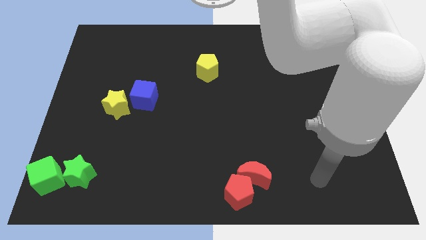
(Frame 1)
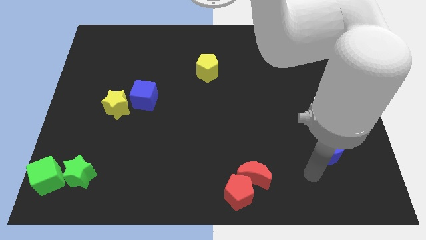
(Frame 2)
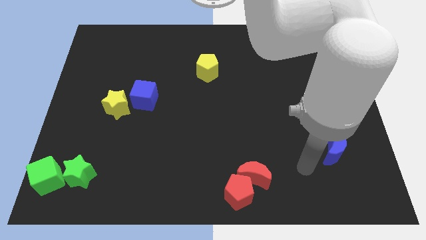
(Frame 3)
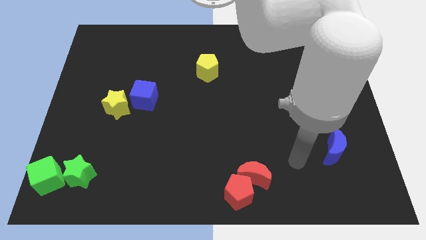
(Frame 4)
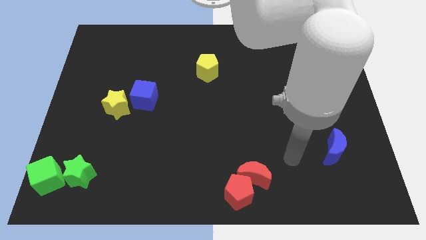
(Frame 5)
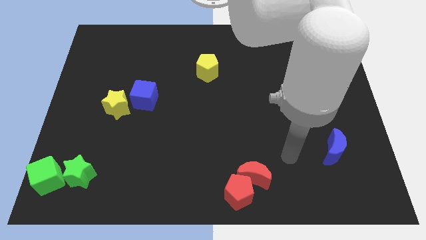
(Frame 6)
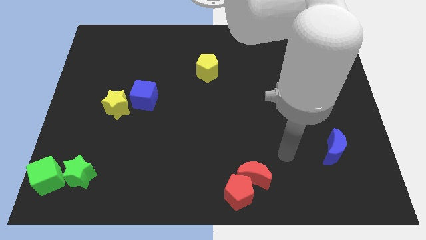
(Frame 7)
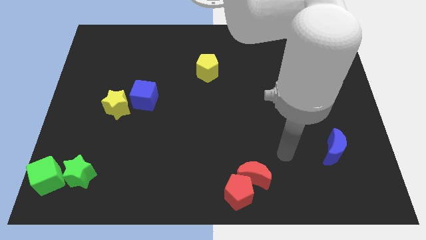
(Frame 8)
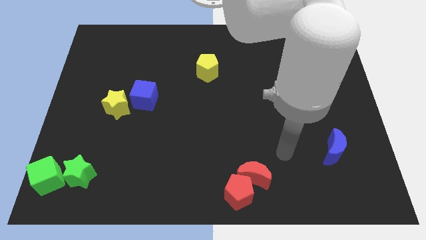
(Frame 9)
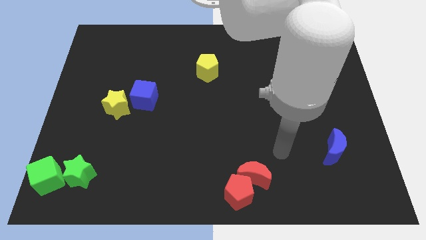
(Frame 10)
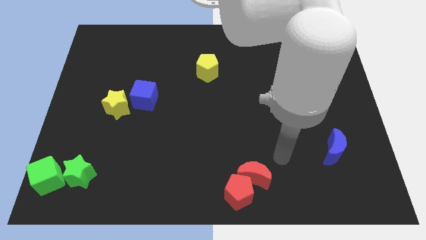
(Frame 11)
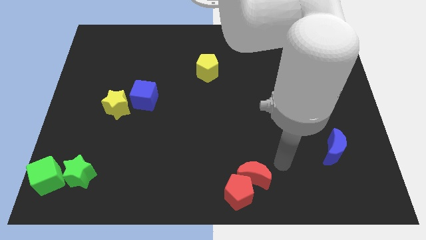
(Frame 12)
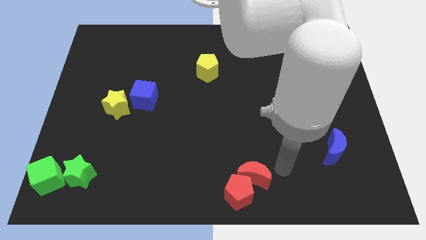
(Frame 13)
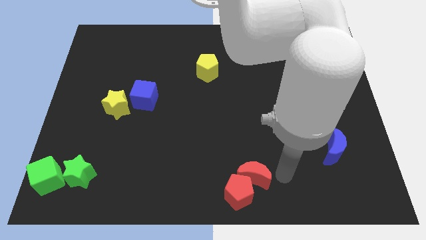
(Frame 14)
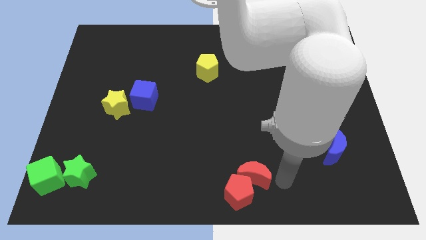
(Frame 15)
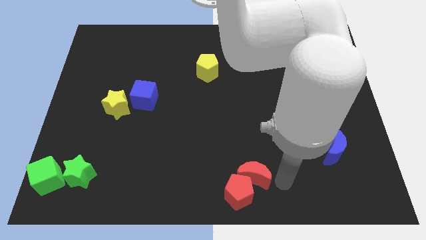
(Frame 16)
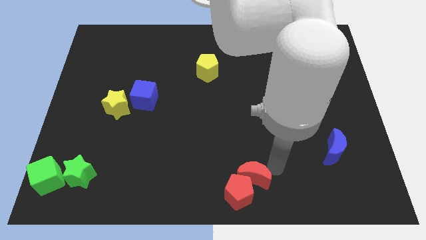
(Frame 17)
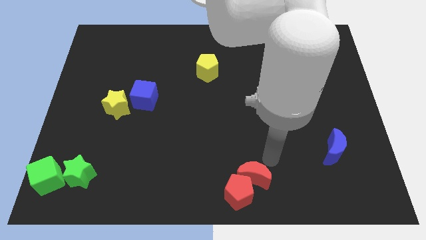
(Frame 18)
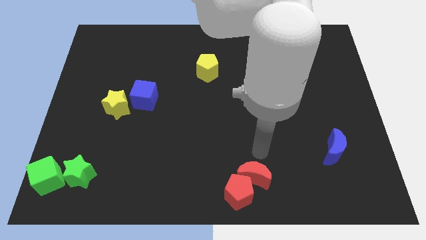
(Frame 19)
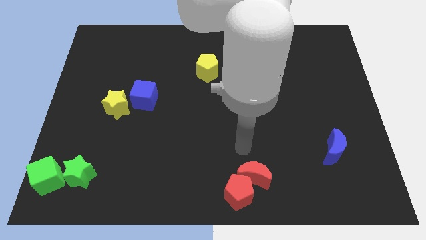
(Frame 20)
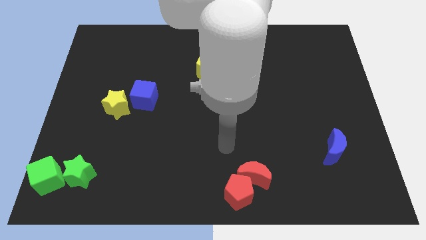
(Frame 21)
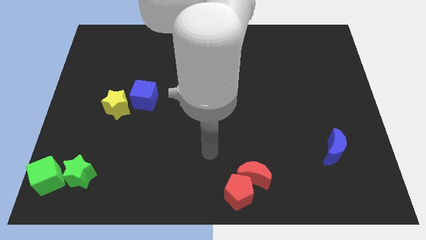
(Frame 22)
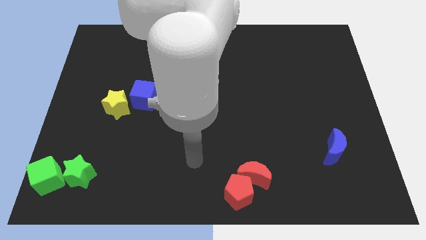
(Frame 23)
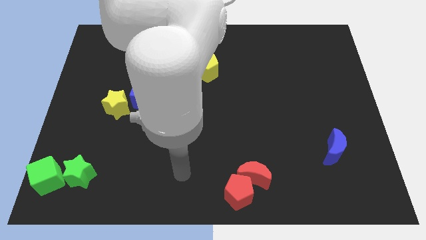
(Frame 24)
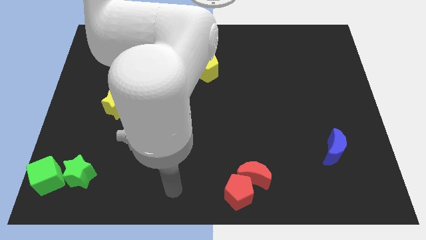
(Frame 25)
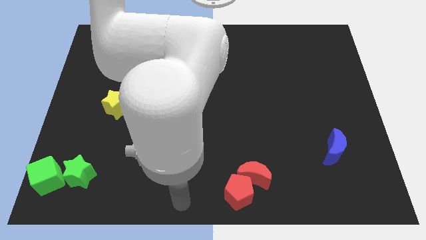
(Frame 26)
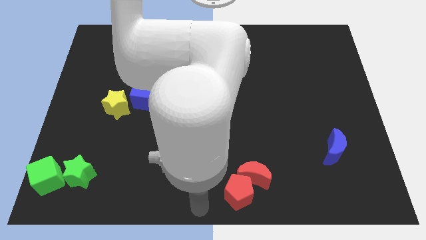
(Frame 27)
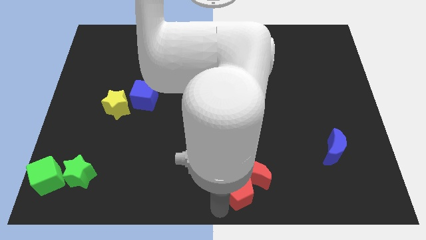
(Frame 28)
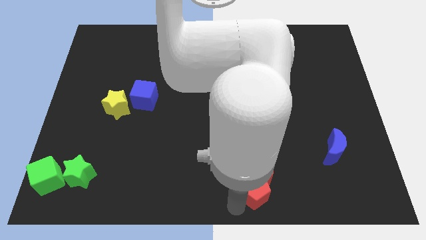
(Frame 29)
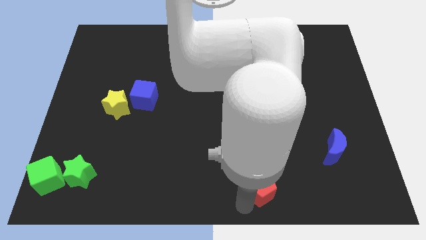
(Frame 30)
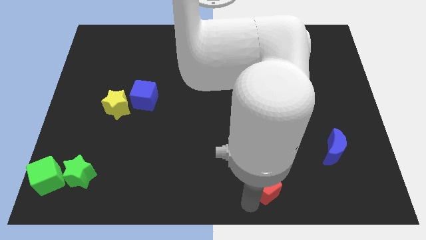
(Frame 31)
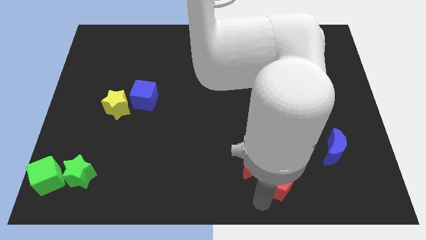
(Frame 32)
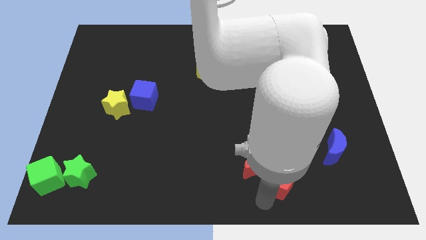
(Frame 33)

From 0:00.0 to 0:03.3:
move the red pentagon and red crescent towards top

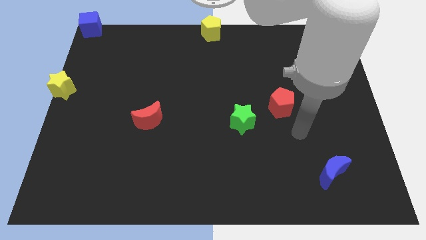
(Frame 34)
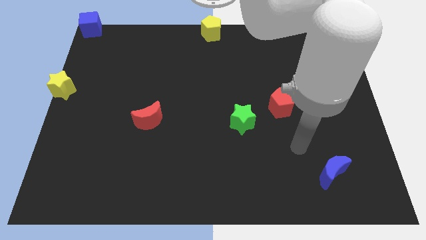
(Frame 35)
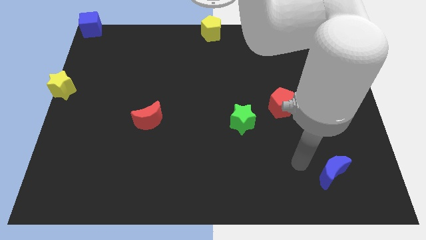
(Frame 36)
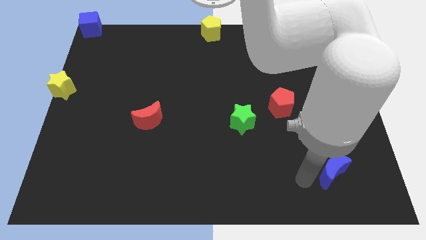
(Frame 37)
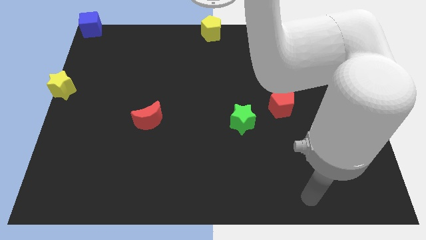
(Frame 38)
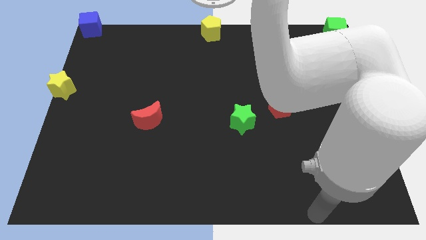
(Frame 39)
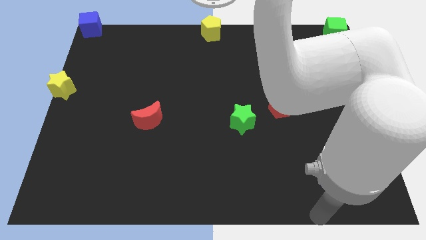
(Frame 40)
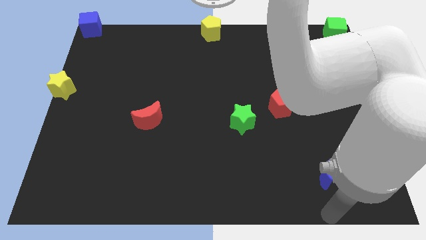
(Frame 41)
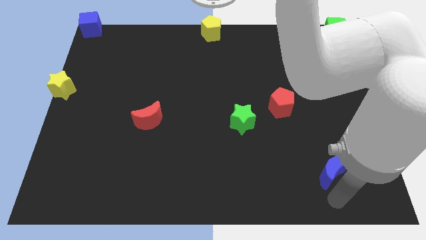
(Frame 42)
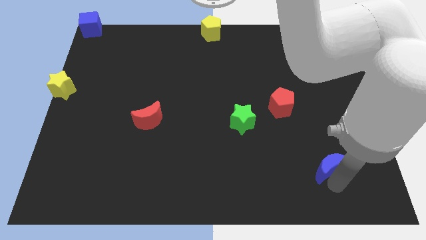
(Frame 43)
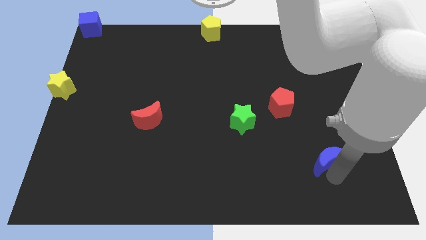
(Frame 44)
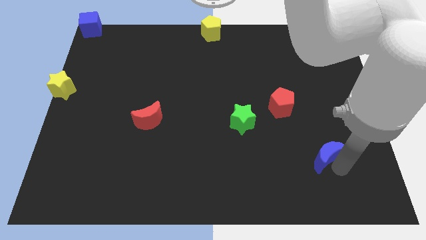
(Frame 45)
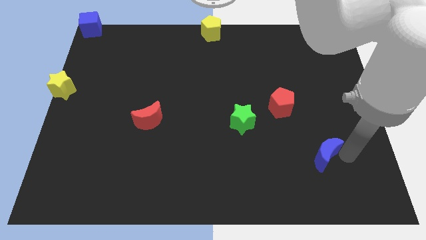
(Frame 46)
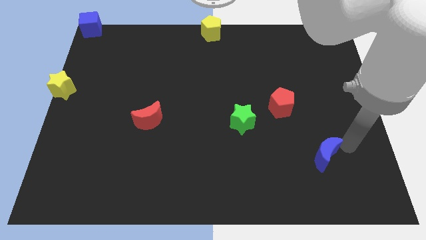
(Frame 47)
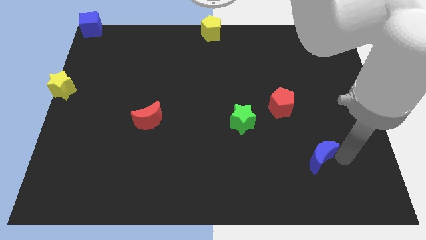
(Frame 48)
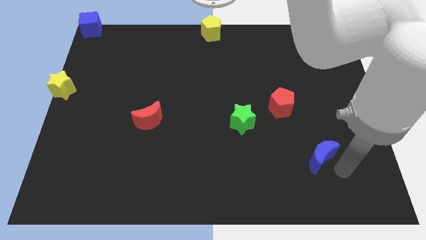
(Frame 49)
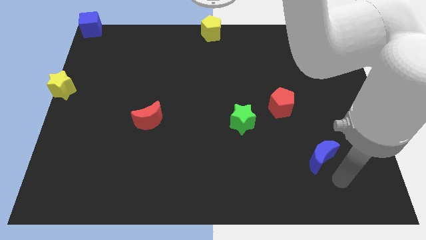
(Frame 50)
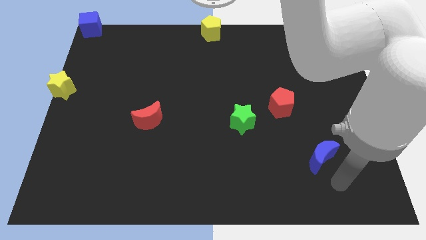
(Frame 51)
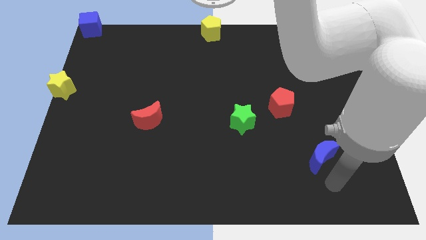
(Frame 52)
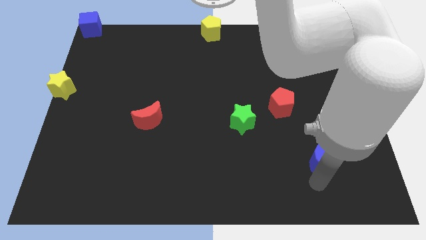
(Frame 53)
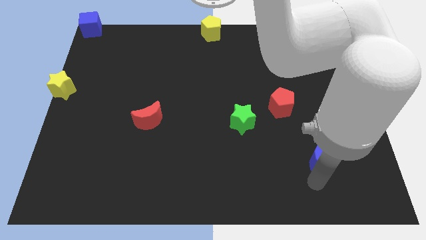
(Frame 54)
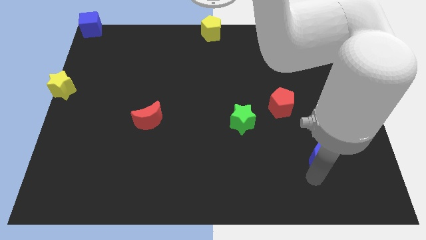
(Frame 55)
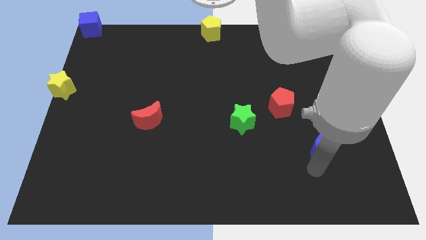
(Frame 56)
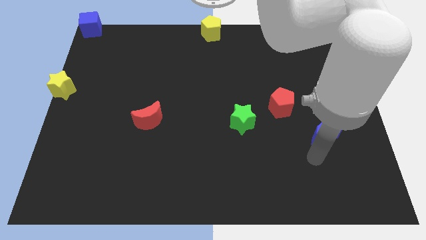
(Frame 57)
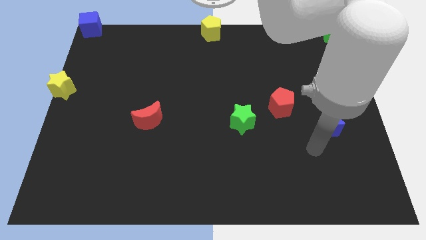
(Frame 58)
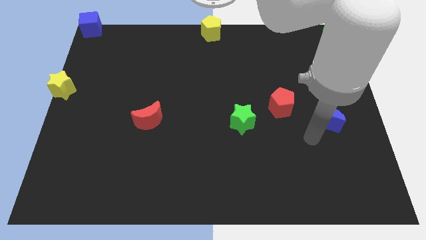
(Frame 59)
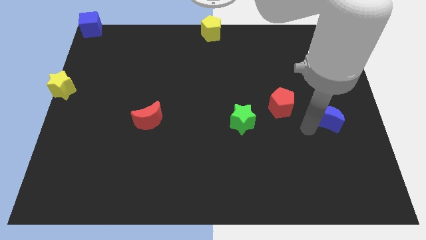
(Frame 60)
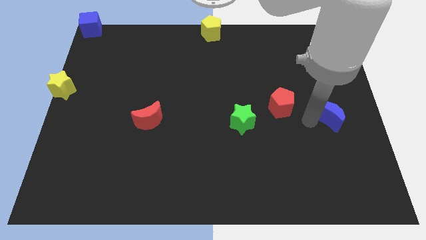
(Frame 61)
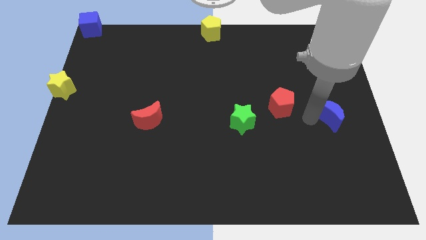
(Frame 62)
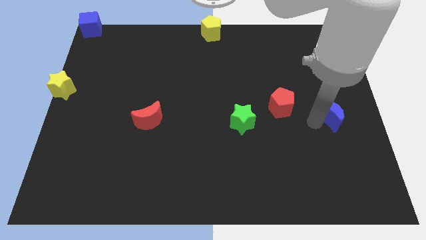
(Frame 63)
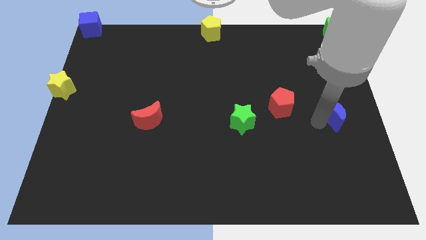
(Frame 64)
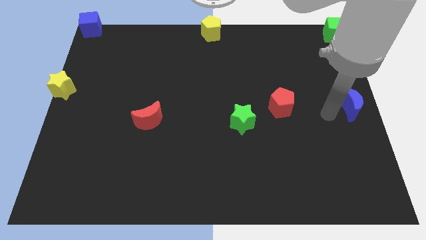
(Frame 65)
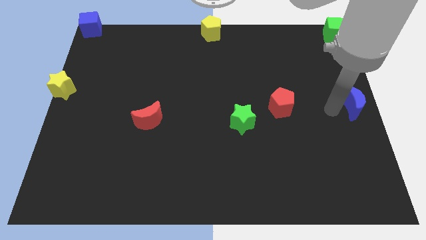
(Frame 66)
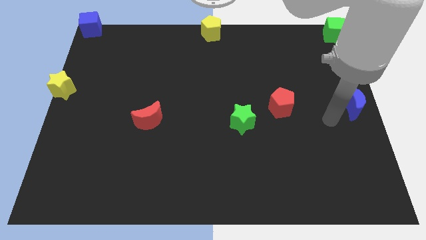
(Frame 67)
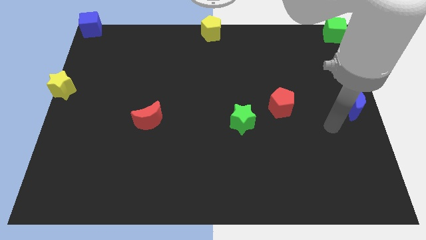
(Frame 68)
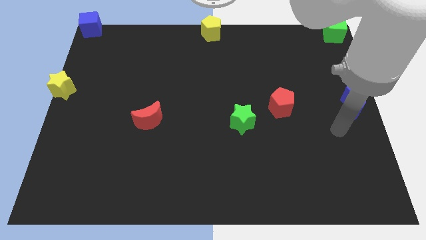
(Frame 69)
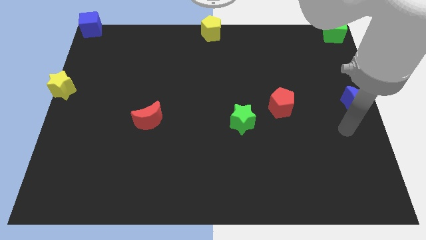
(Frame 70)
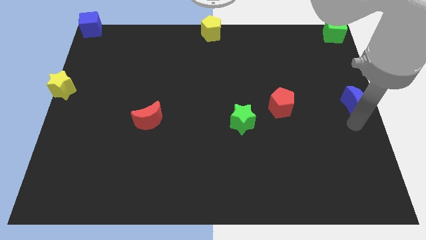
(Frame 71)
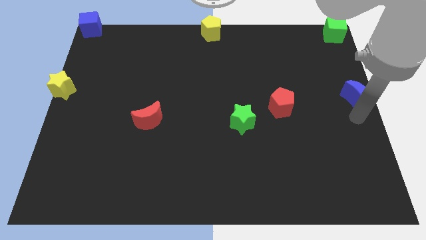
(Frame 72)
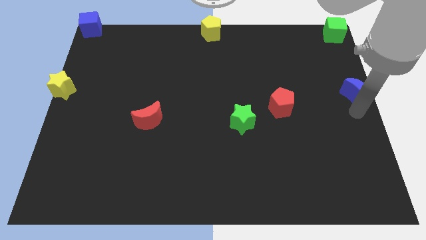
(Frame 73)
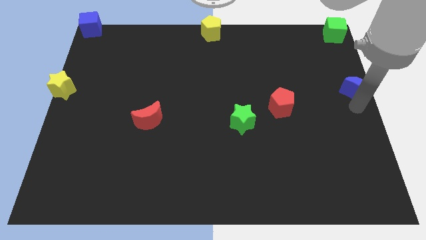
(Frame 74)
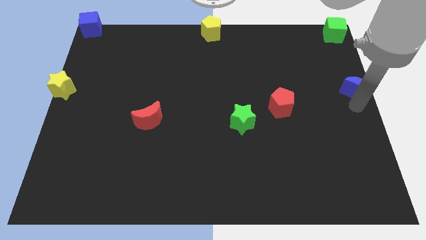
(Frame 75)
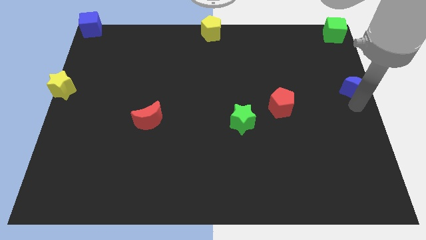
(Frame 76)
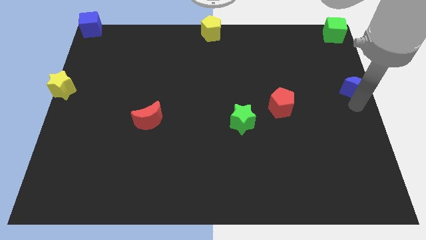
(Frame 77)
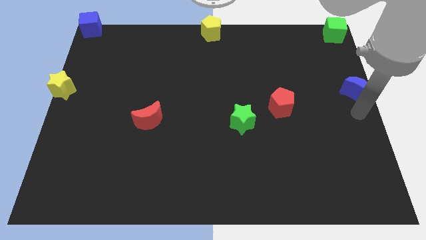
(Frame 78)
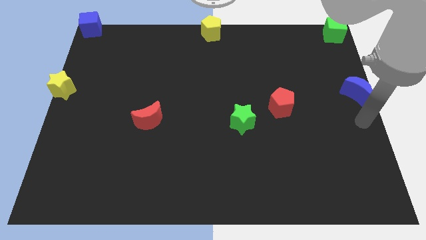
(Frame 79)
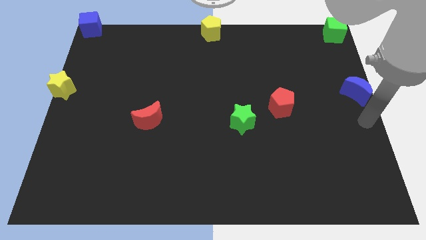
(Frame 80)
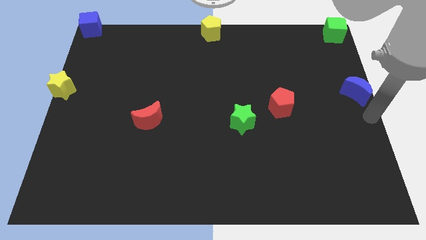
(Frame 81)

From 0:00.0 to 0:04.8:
push the blue moon to the center right side of the board

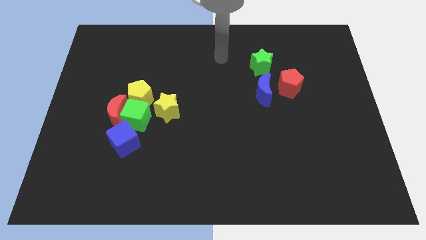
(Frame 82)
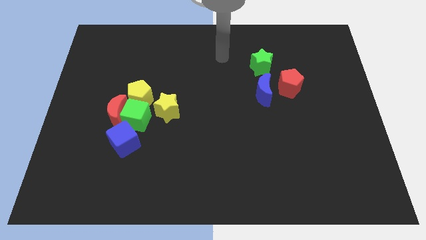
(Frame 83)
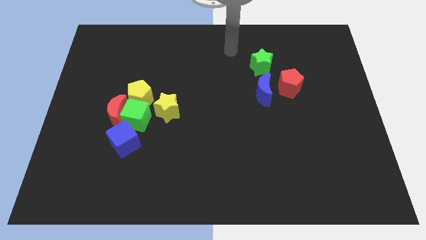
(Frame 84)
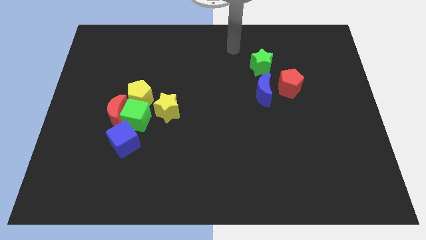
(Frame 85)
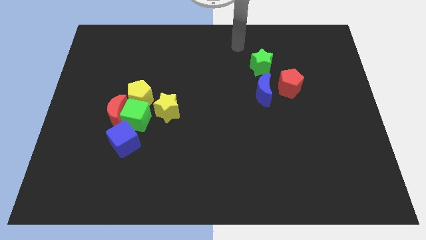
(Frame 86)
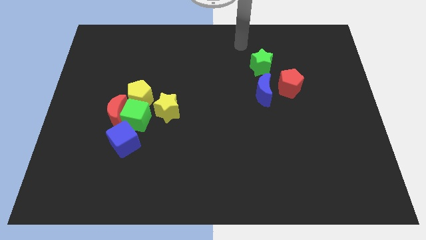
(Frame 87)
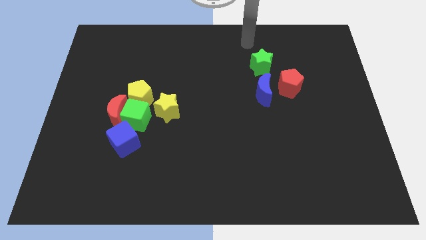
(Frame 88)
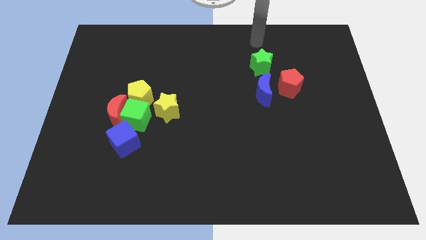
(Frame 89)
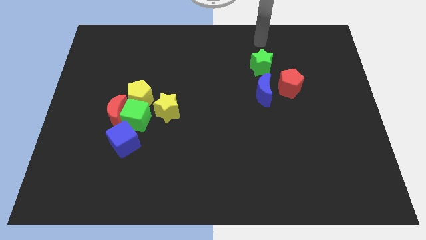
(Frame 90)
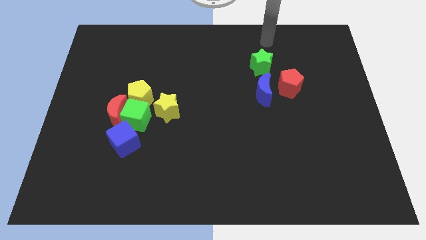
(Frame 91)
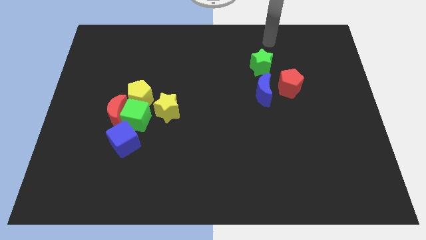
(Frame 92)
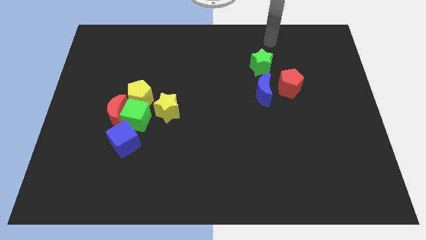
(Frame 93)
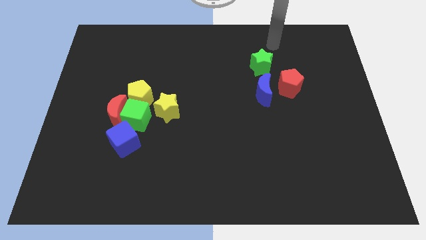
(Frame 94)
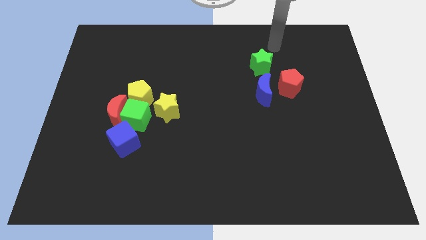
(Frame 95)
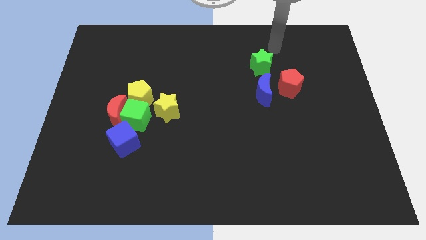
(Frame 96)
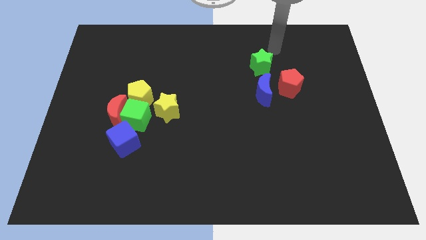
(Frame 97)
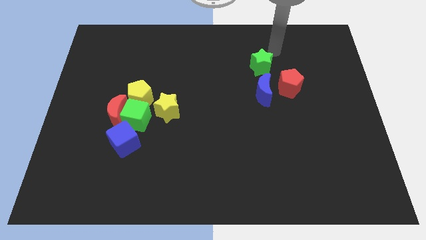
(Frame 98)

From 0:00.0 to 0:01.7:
place your arm to the top of green star
